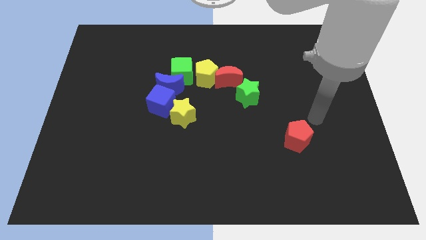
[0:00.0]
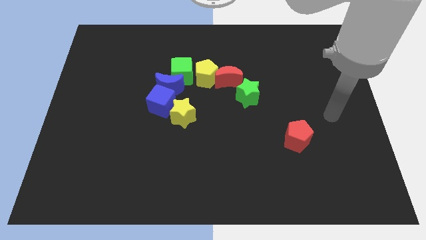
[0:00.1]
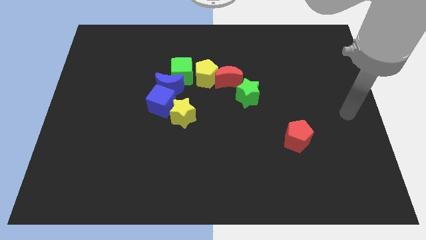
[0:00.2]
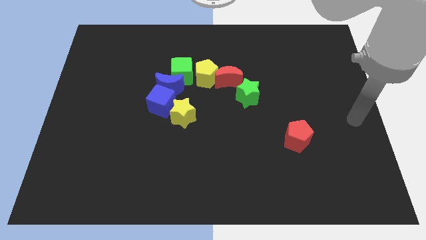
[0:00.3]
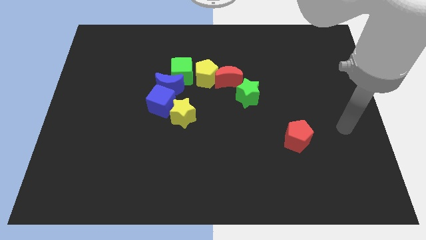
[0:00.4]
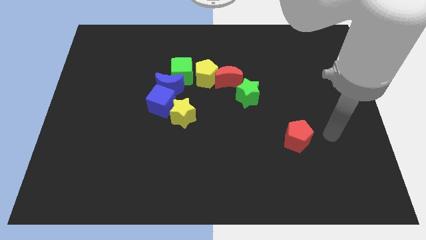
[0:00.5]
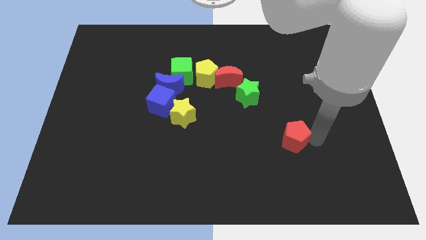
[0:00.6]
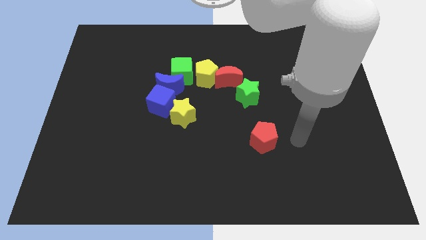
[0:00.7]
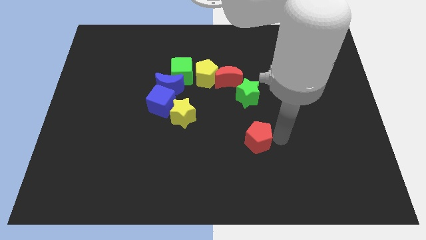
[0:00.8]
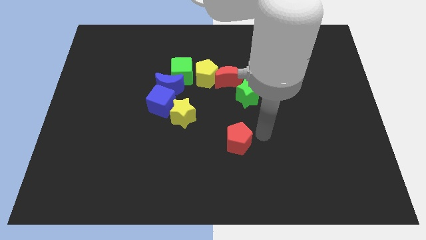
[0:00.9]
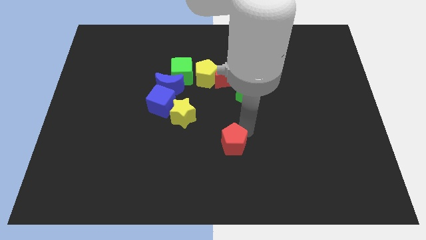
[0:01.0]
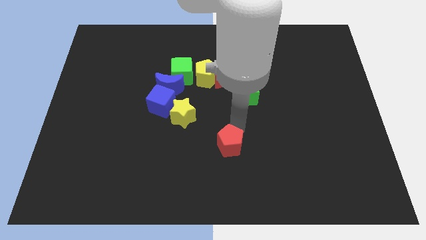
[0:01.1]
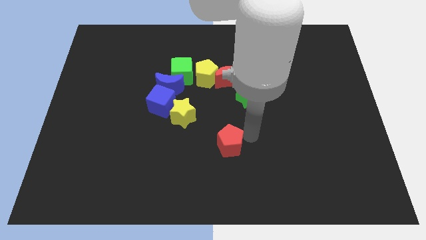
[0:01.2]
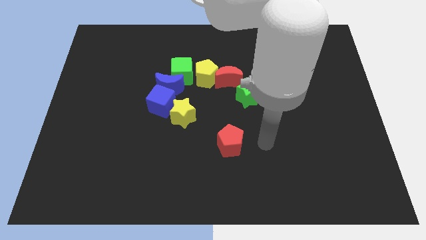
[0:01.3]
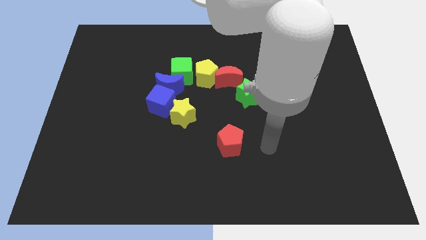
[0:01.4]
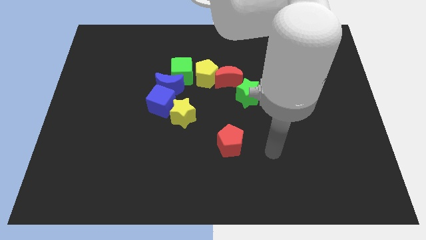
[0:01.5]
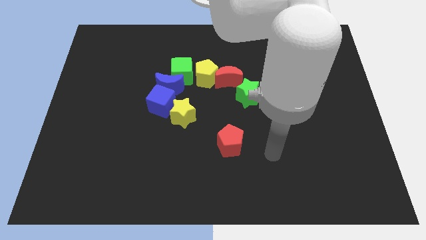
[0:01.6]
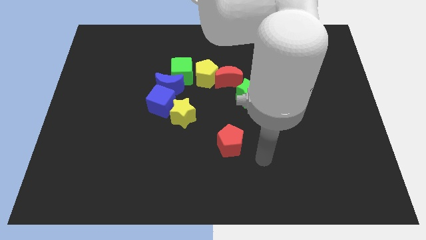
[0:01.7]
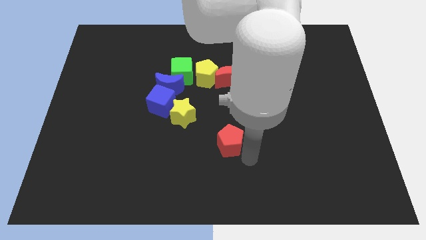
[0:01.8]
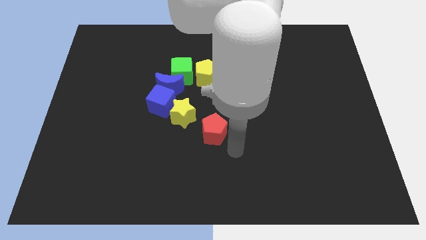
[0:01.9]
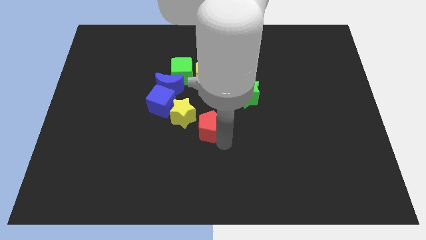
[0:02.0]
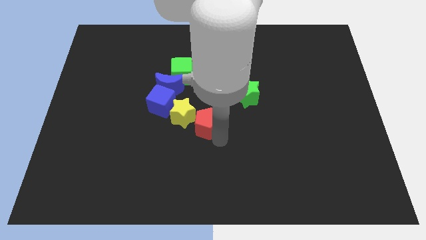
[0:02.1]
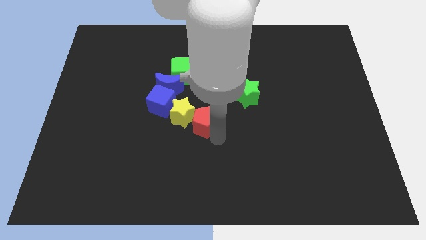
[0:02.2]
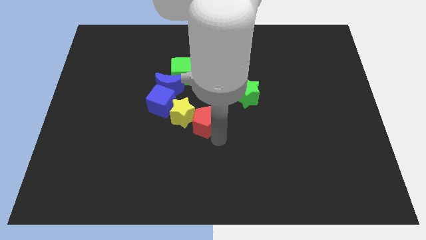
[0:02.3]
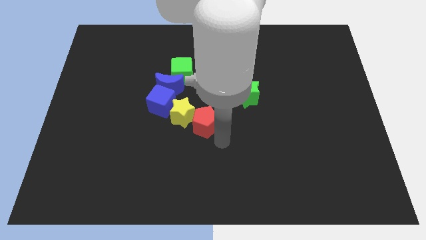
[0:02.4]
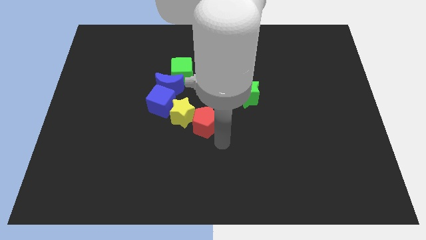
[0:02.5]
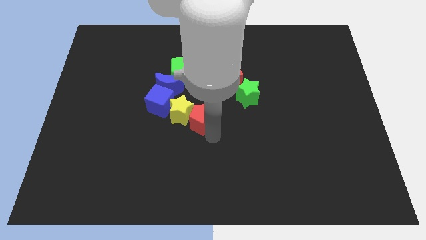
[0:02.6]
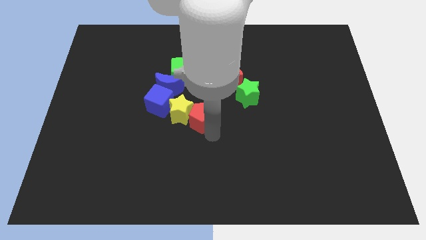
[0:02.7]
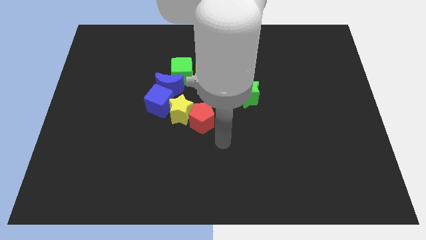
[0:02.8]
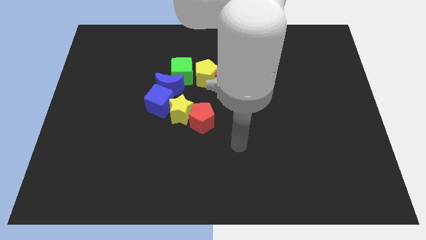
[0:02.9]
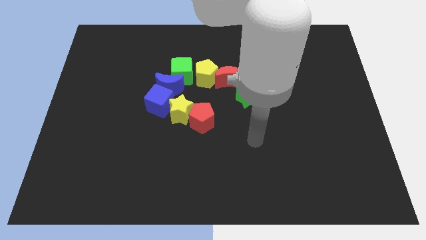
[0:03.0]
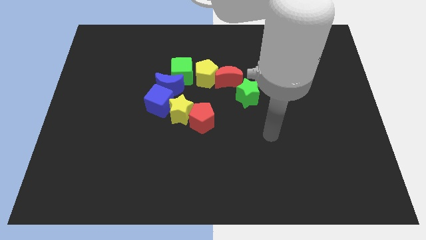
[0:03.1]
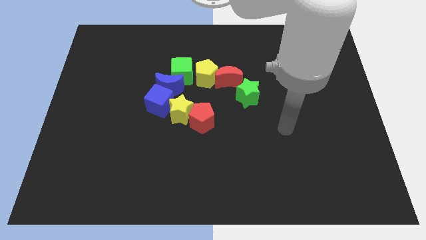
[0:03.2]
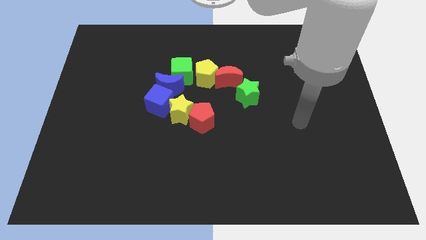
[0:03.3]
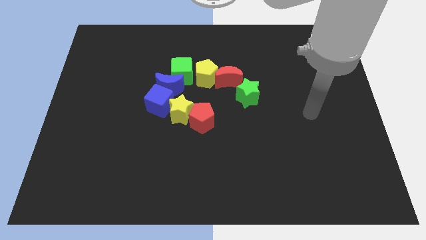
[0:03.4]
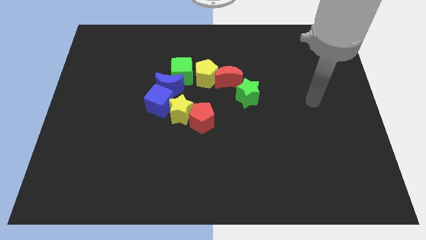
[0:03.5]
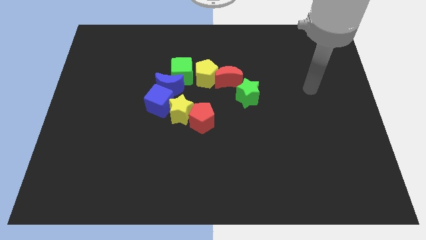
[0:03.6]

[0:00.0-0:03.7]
push the red pentagon towards the right side of the yellow star

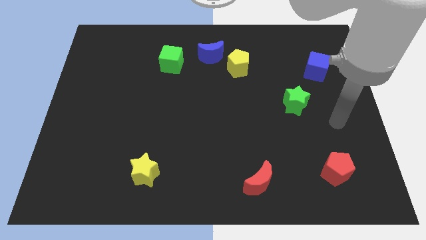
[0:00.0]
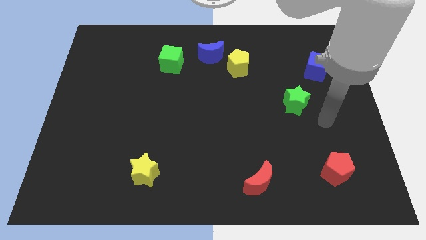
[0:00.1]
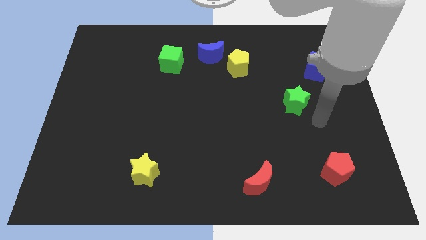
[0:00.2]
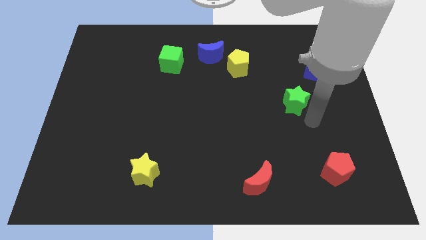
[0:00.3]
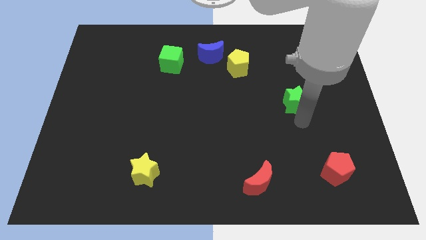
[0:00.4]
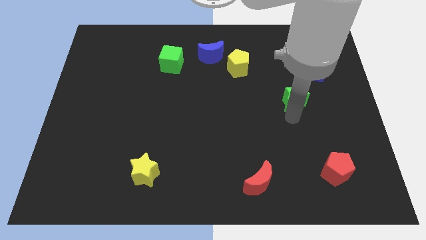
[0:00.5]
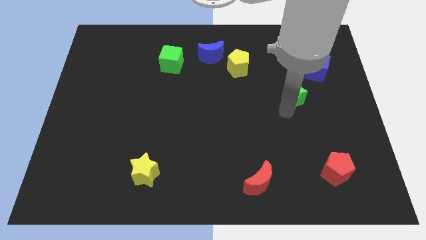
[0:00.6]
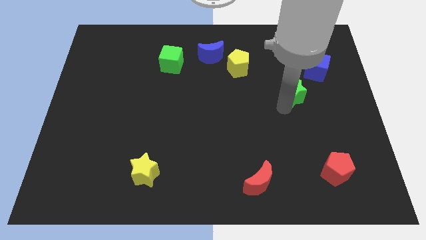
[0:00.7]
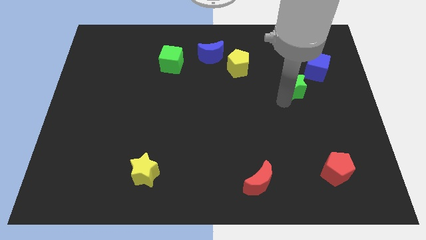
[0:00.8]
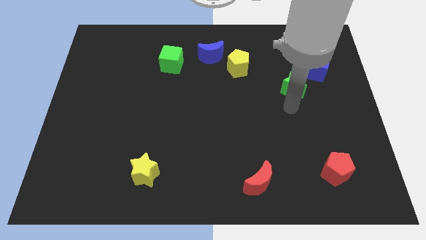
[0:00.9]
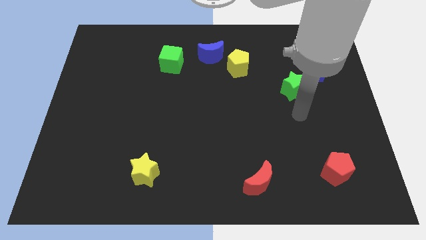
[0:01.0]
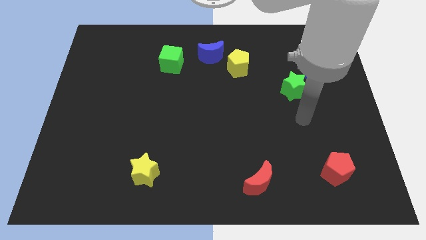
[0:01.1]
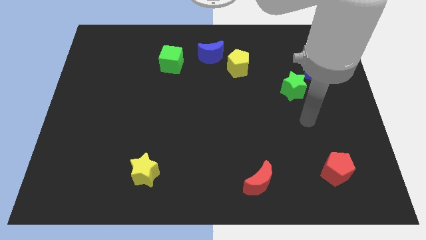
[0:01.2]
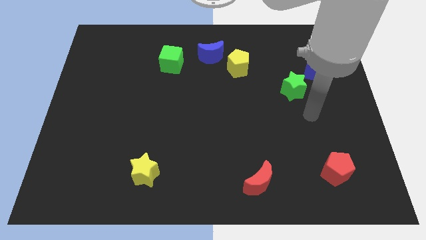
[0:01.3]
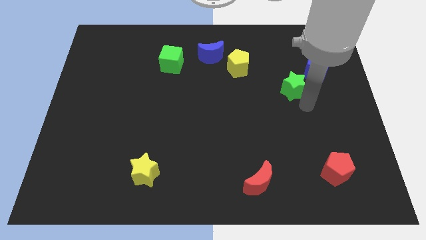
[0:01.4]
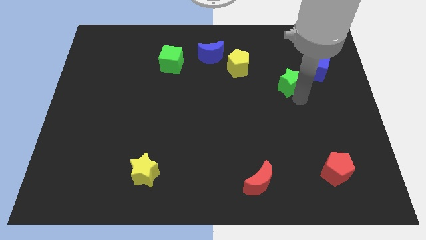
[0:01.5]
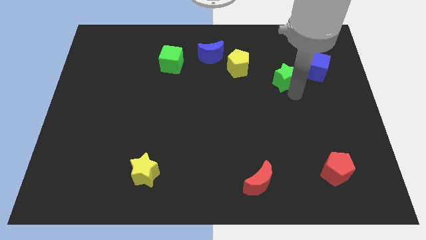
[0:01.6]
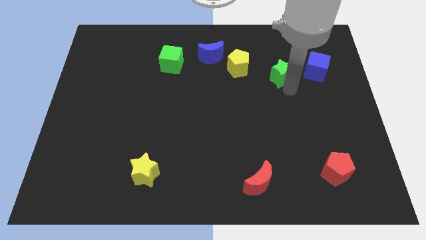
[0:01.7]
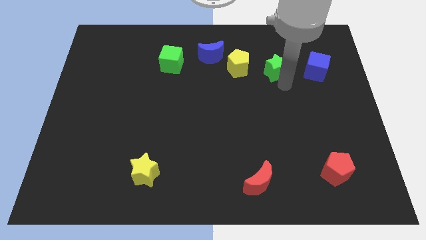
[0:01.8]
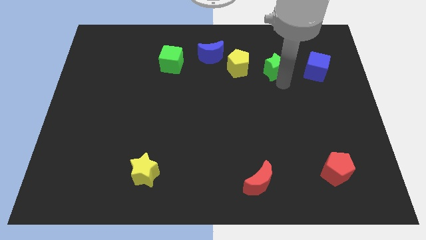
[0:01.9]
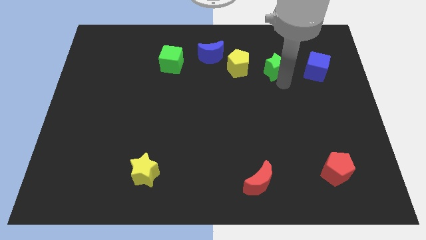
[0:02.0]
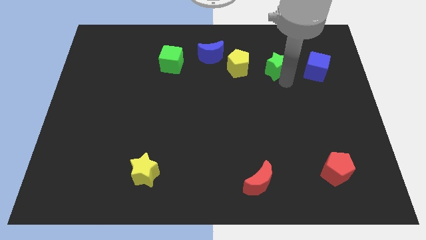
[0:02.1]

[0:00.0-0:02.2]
place the green star left to the blue cube

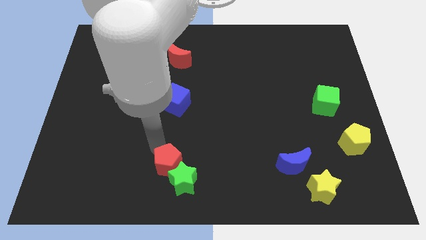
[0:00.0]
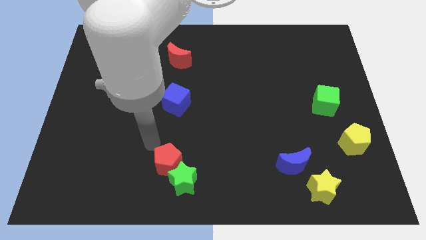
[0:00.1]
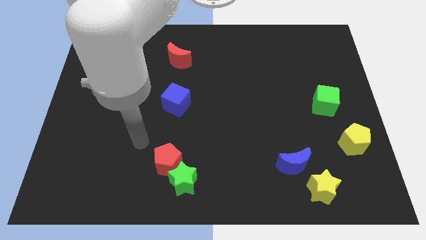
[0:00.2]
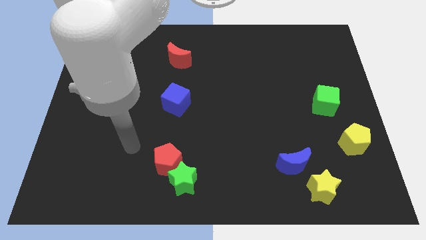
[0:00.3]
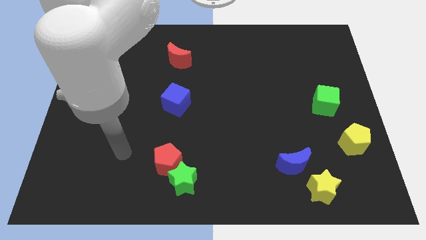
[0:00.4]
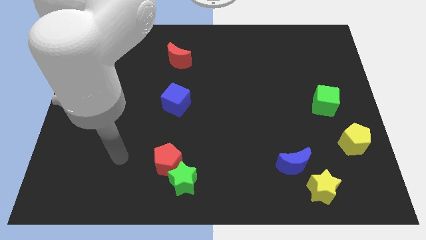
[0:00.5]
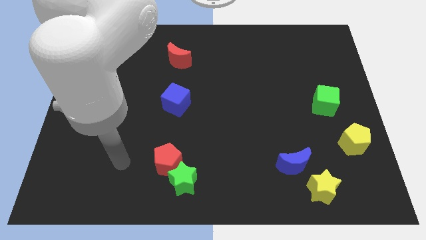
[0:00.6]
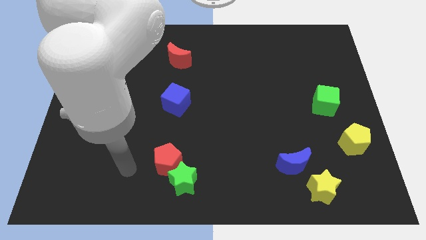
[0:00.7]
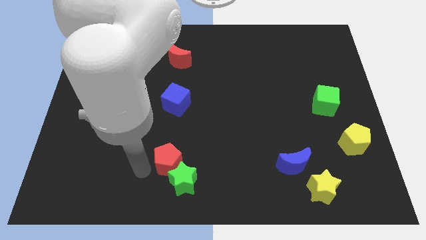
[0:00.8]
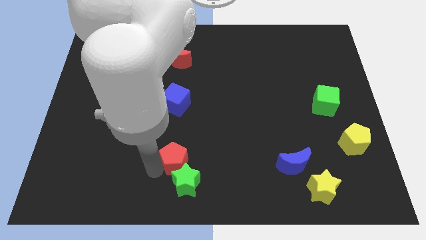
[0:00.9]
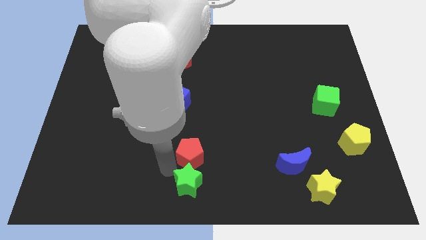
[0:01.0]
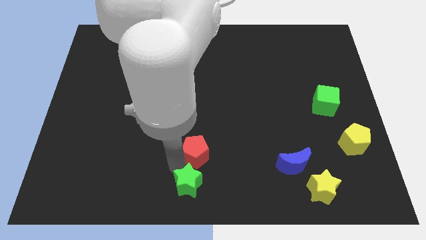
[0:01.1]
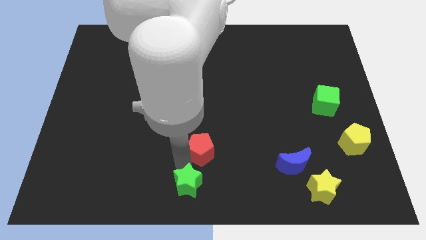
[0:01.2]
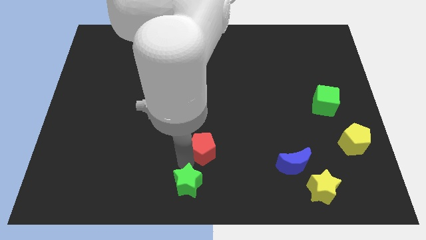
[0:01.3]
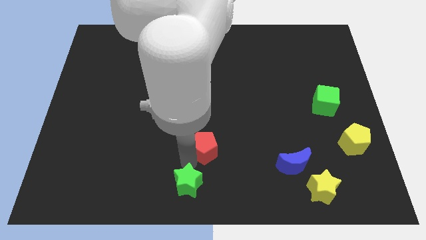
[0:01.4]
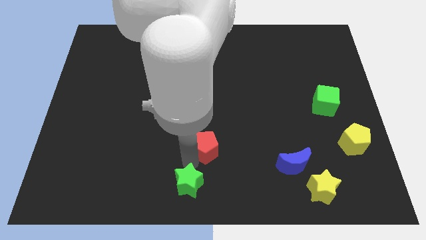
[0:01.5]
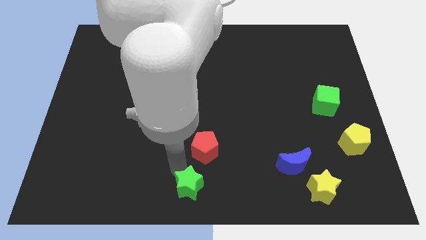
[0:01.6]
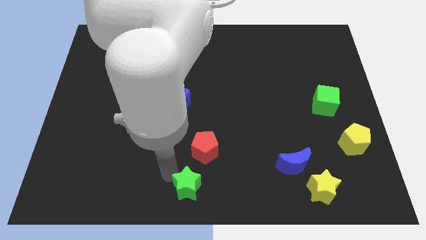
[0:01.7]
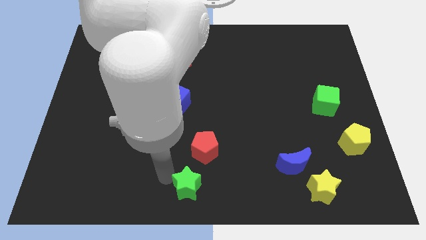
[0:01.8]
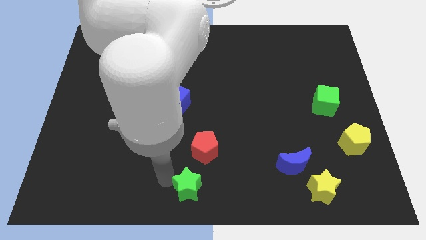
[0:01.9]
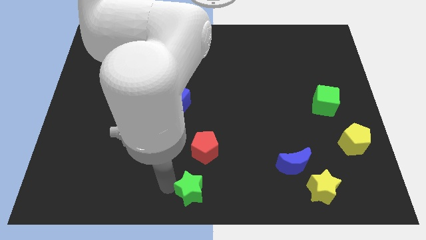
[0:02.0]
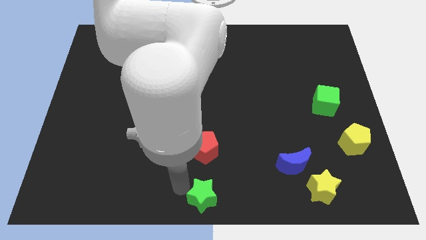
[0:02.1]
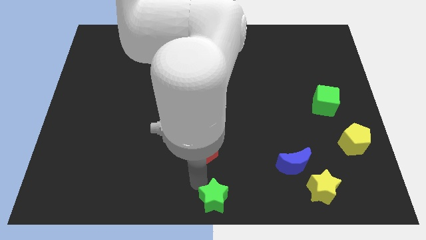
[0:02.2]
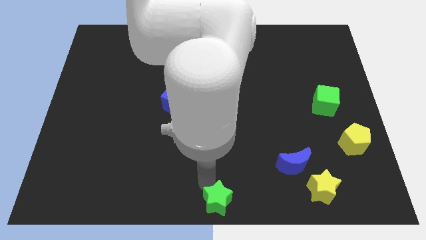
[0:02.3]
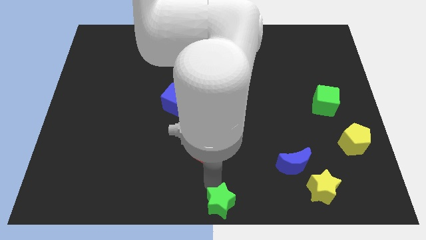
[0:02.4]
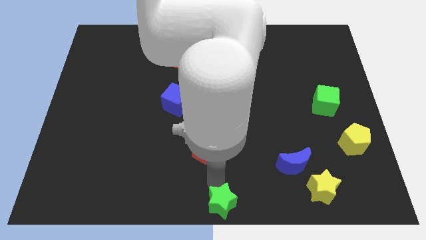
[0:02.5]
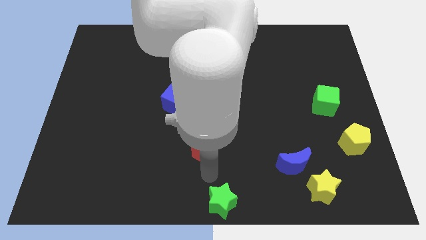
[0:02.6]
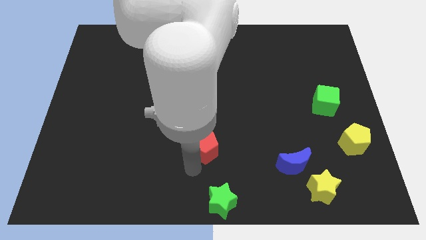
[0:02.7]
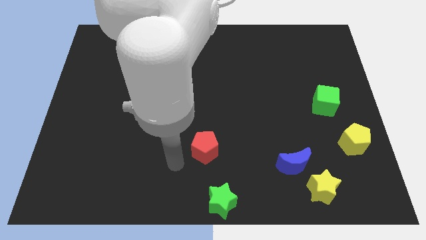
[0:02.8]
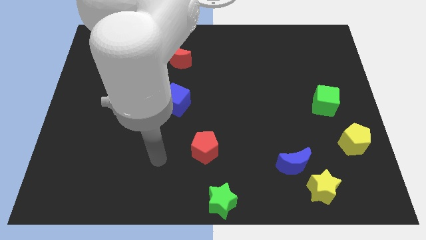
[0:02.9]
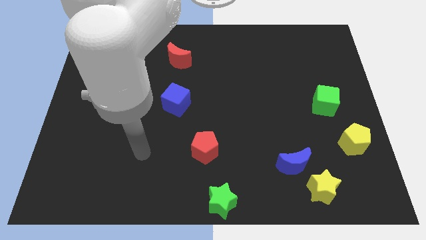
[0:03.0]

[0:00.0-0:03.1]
separate the red pentagon with the green star
